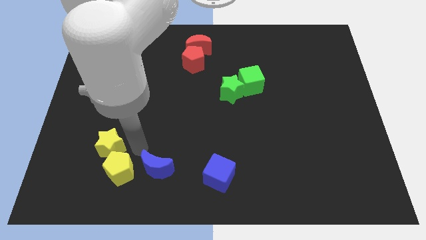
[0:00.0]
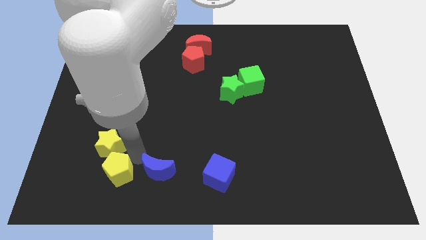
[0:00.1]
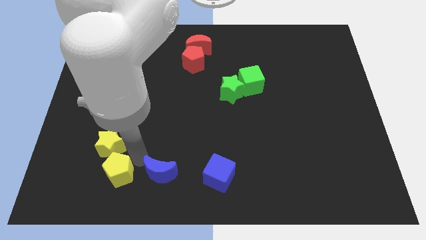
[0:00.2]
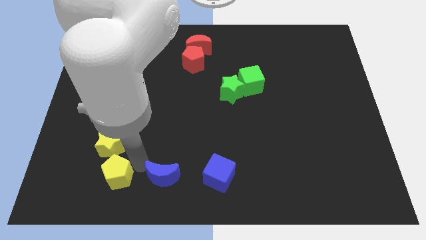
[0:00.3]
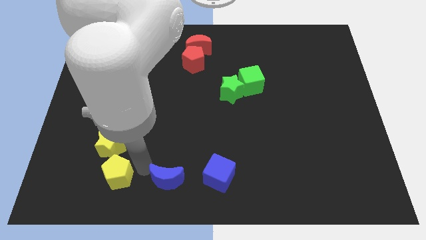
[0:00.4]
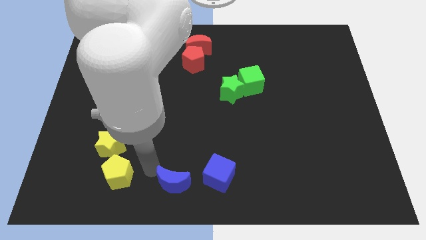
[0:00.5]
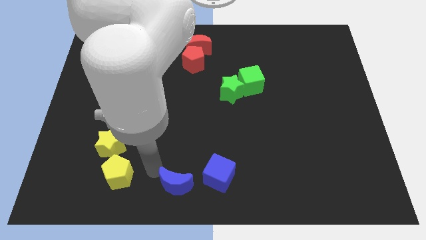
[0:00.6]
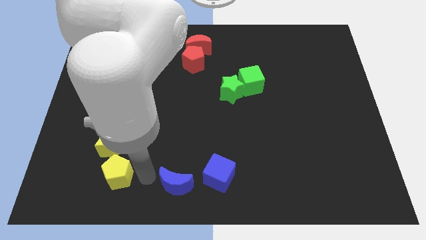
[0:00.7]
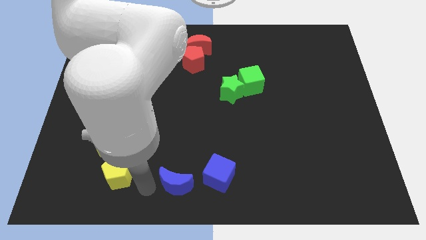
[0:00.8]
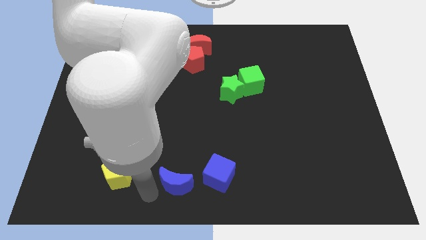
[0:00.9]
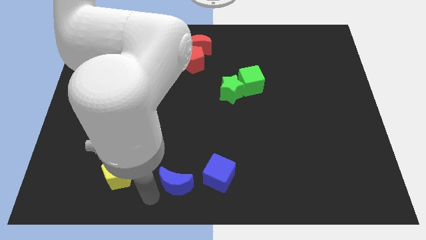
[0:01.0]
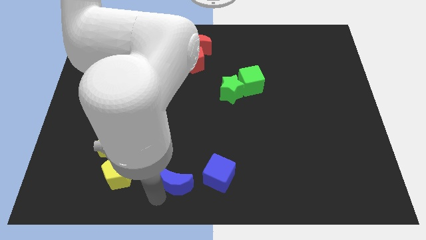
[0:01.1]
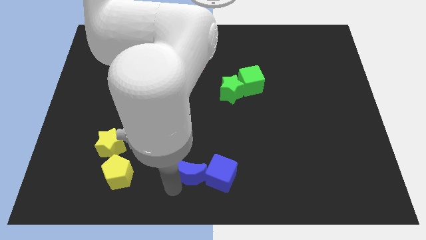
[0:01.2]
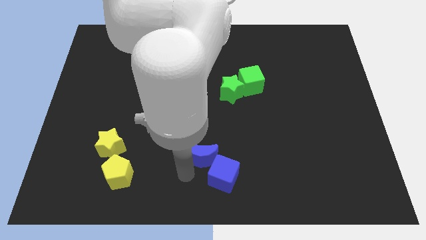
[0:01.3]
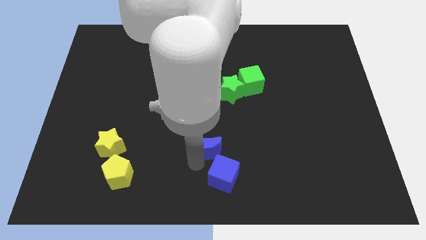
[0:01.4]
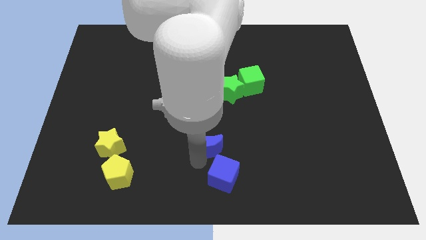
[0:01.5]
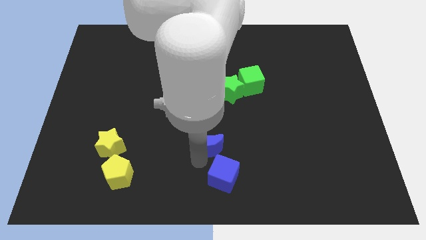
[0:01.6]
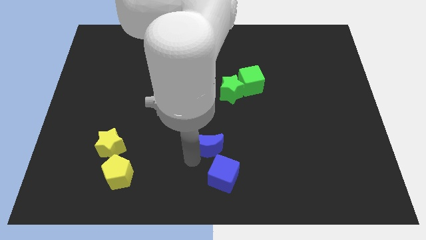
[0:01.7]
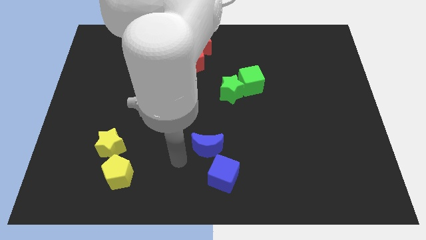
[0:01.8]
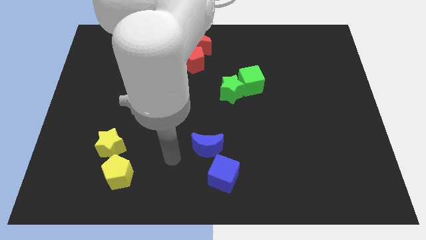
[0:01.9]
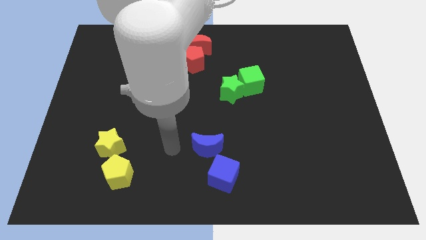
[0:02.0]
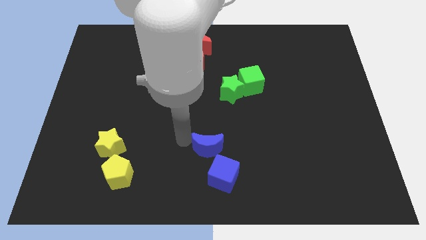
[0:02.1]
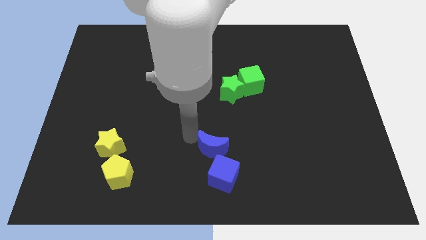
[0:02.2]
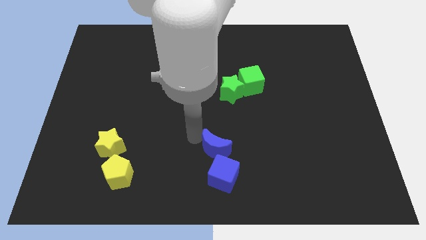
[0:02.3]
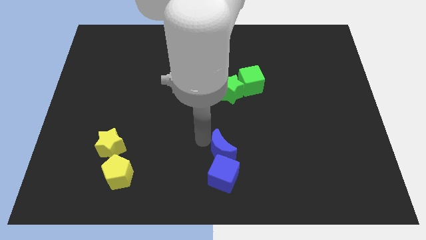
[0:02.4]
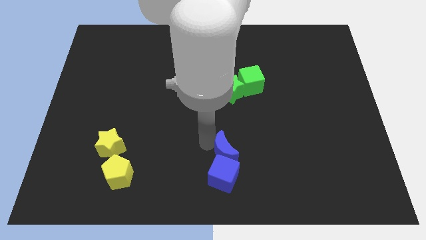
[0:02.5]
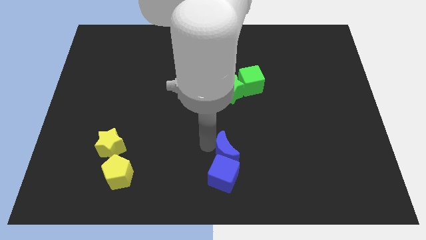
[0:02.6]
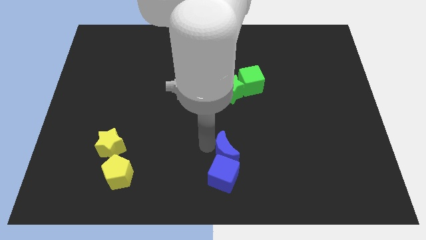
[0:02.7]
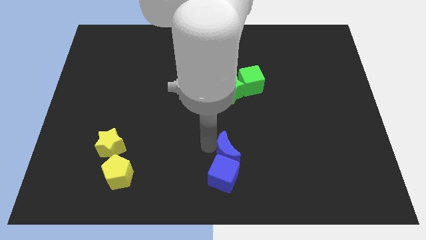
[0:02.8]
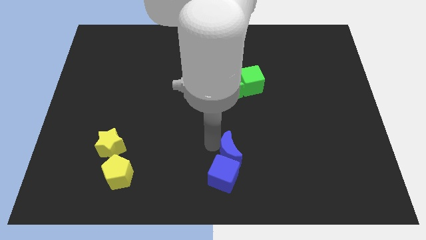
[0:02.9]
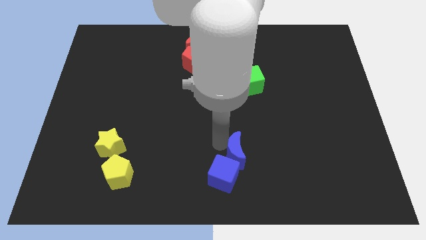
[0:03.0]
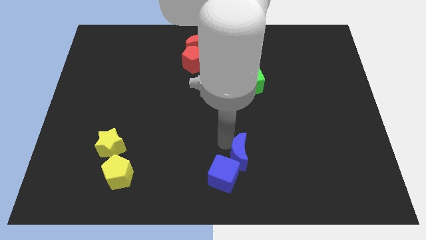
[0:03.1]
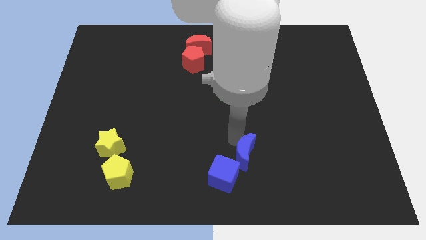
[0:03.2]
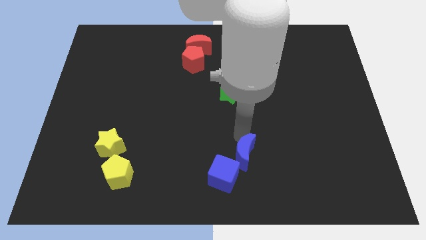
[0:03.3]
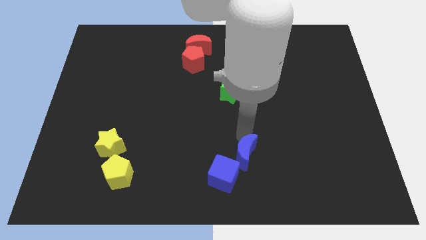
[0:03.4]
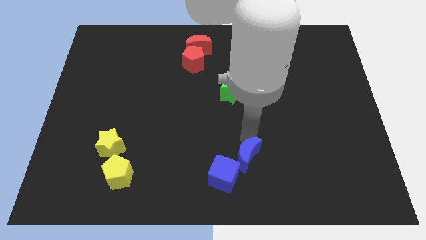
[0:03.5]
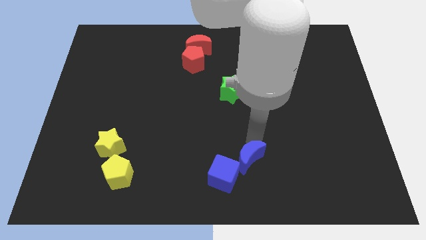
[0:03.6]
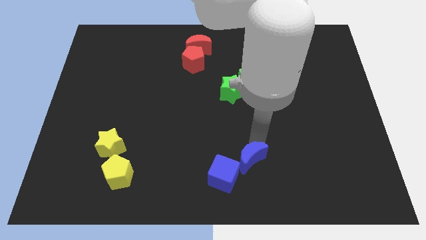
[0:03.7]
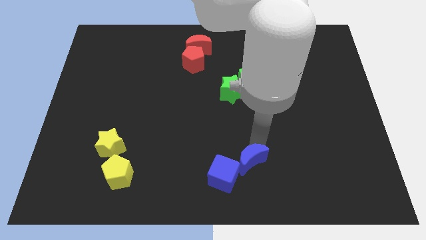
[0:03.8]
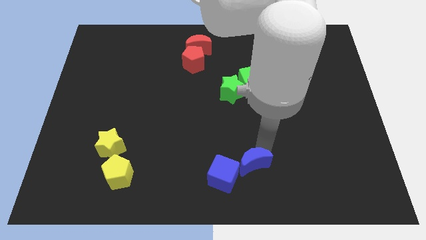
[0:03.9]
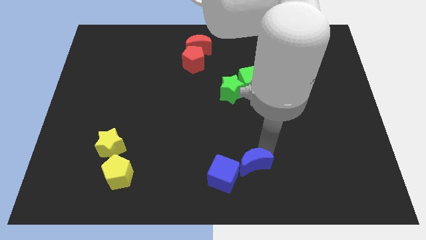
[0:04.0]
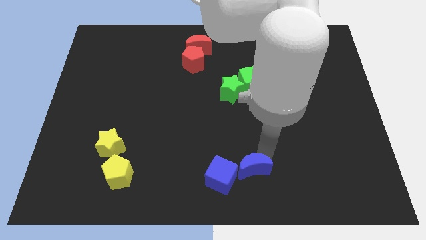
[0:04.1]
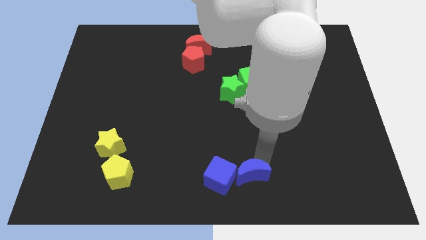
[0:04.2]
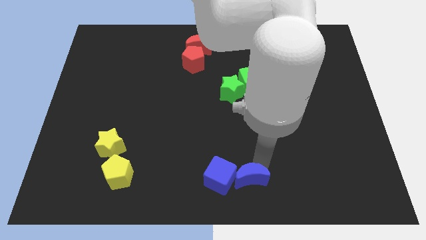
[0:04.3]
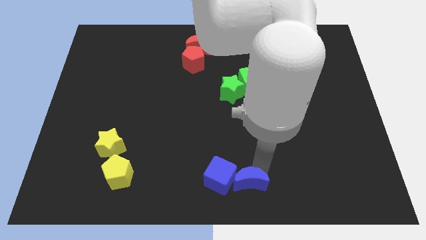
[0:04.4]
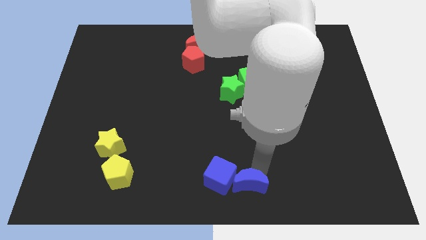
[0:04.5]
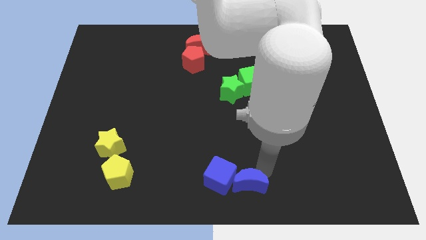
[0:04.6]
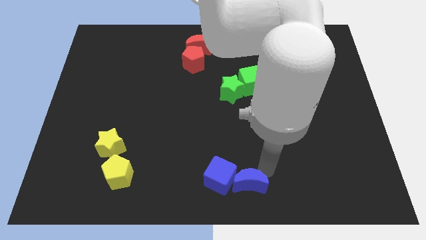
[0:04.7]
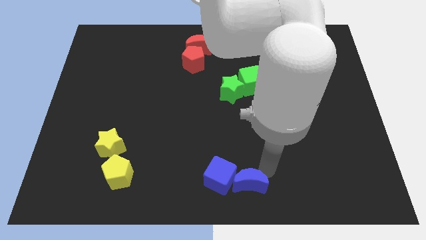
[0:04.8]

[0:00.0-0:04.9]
place blue crescent vertical to the green star

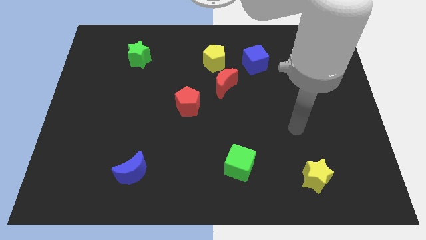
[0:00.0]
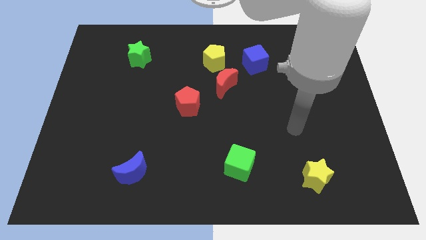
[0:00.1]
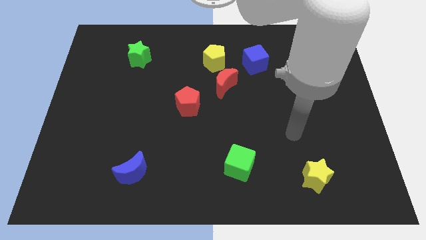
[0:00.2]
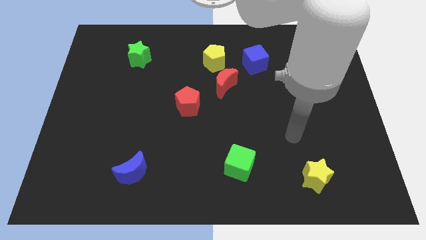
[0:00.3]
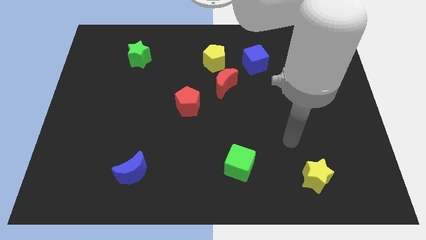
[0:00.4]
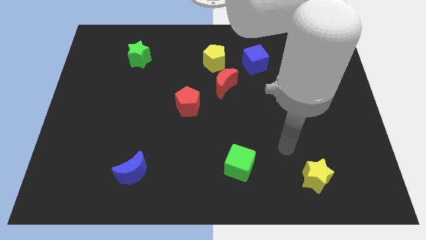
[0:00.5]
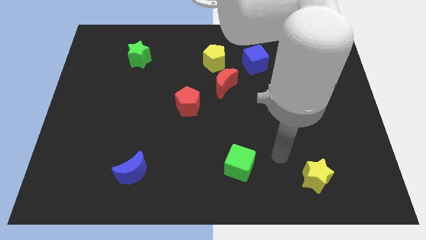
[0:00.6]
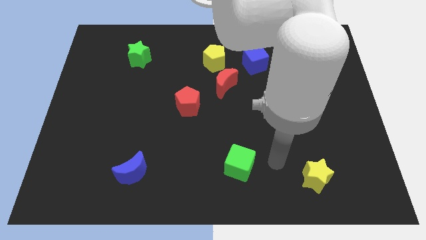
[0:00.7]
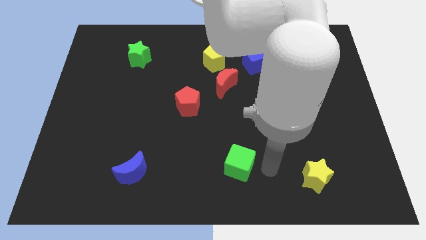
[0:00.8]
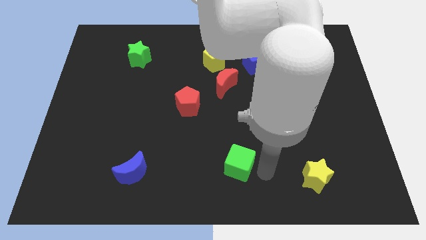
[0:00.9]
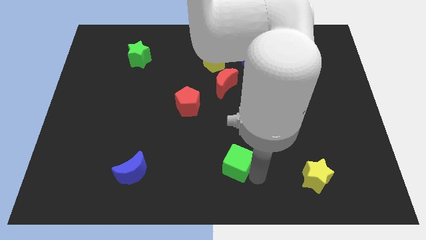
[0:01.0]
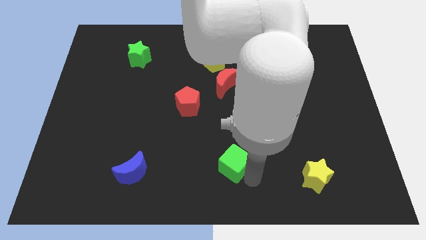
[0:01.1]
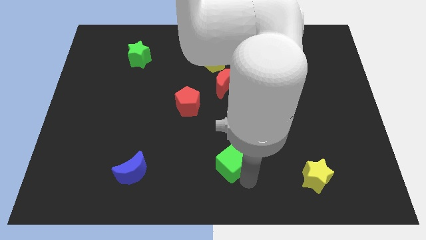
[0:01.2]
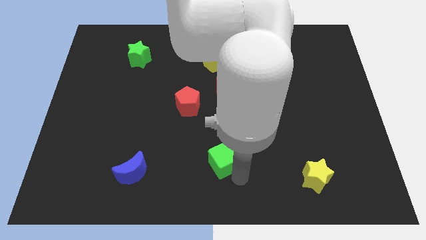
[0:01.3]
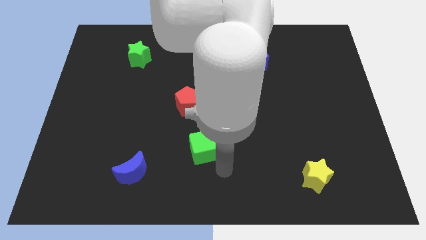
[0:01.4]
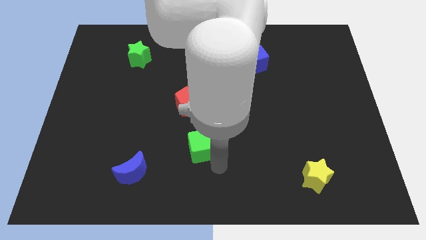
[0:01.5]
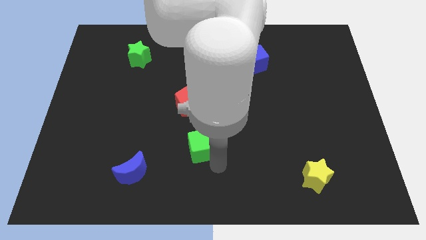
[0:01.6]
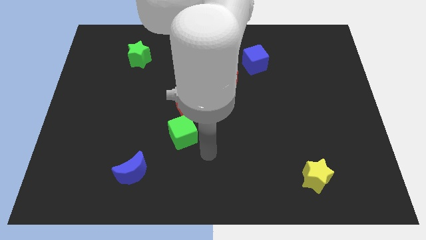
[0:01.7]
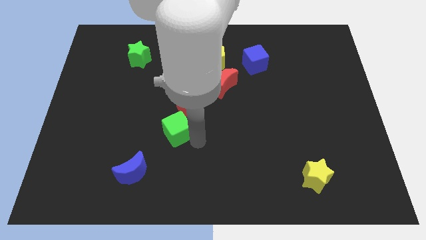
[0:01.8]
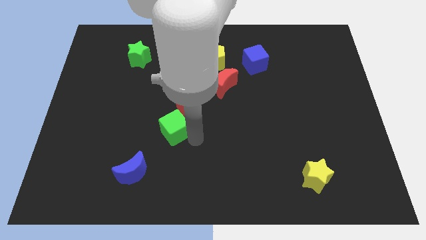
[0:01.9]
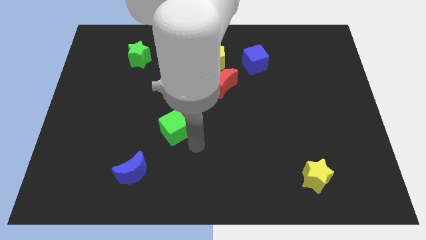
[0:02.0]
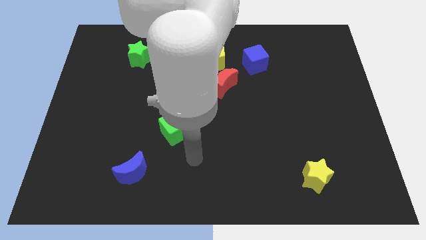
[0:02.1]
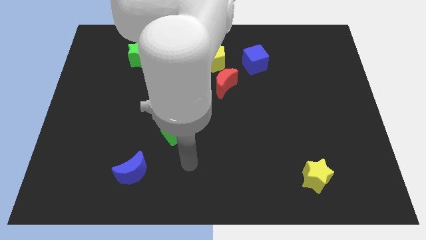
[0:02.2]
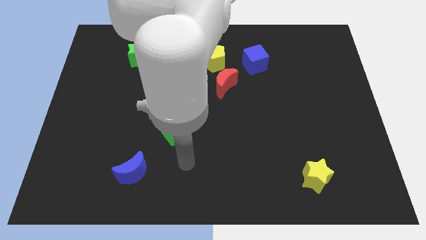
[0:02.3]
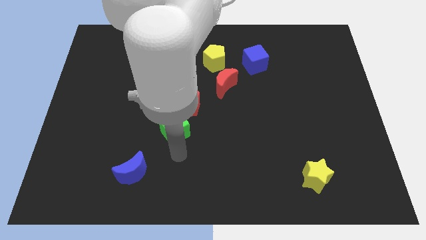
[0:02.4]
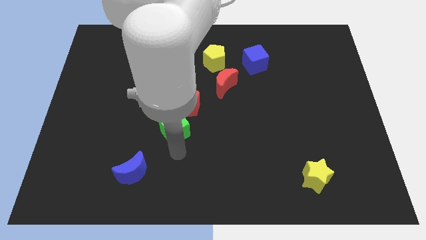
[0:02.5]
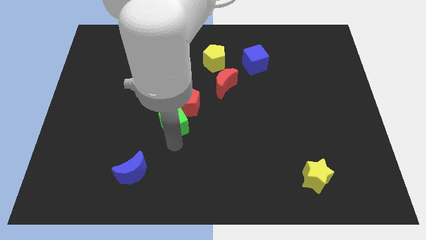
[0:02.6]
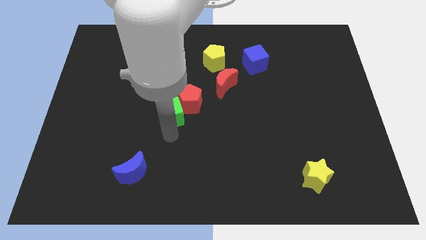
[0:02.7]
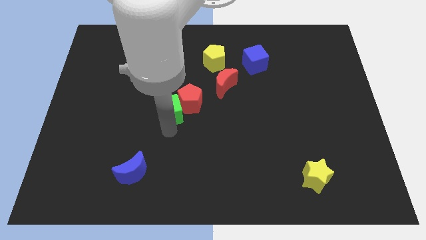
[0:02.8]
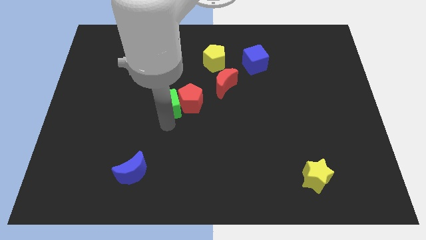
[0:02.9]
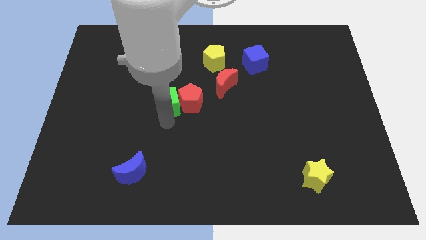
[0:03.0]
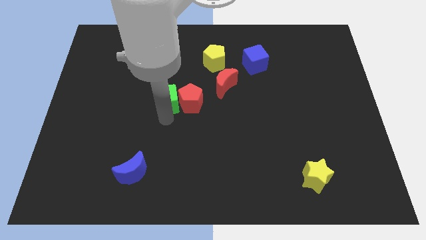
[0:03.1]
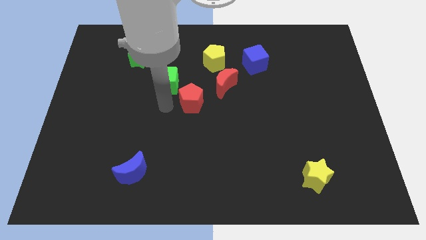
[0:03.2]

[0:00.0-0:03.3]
place the green cube to the left side of the red pentagon

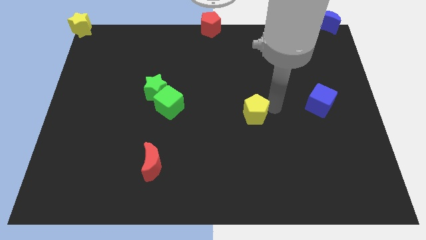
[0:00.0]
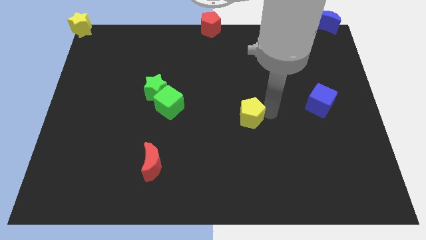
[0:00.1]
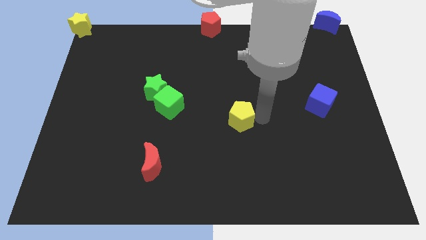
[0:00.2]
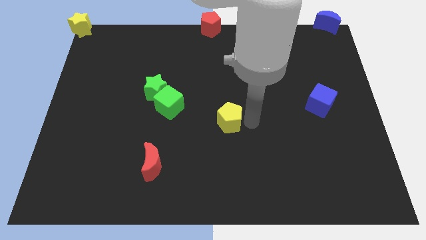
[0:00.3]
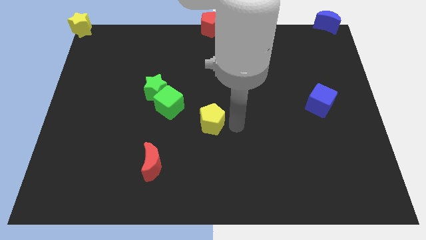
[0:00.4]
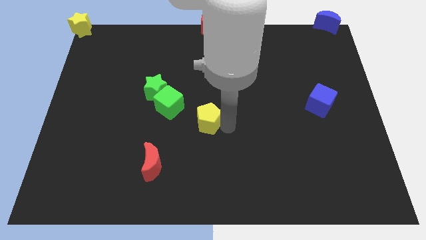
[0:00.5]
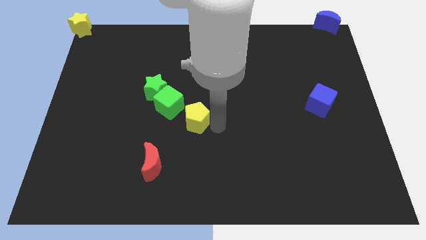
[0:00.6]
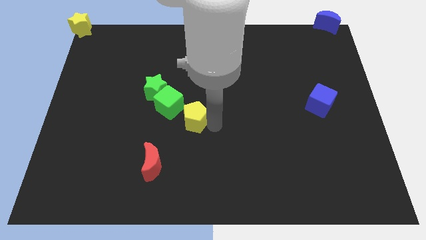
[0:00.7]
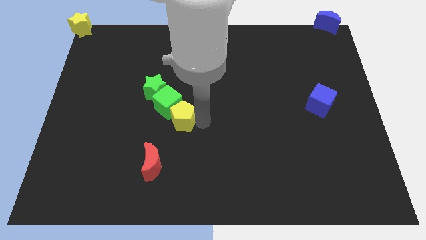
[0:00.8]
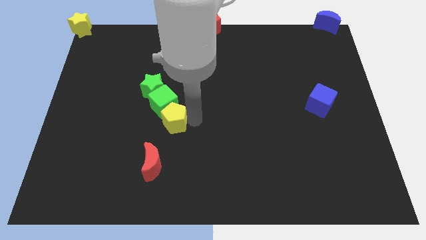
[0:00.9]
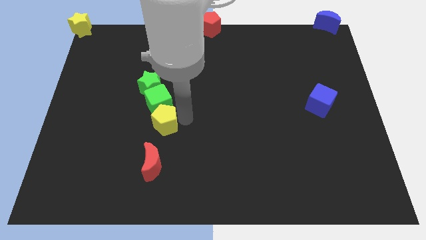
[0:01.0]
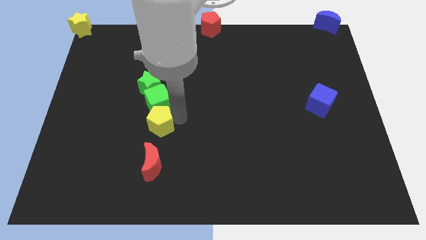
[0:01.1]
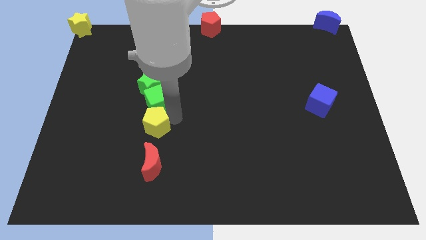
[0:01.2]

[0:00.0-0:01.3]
push the yellow pentagon to the bottom of the green cube
